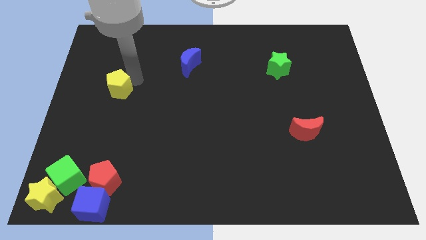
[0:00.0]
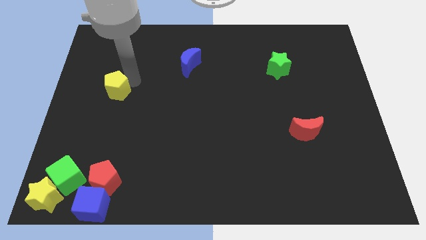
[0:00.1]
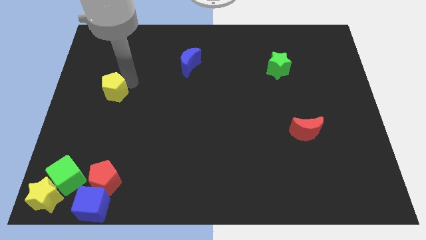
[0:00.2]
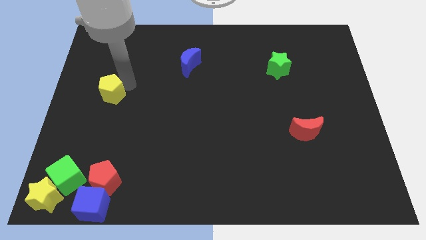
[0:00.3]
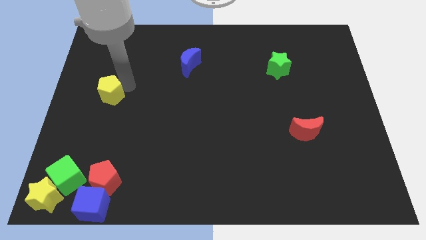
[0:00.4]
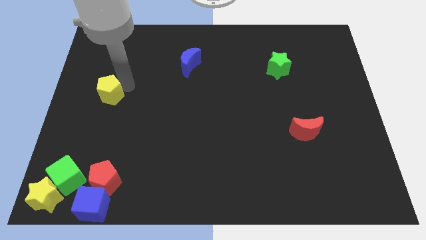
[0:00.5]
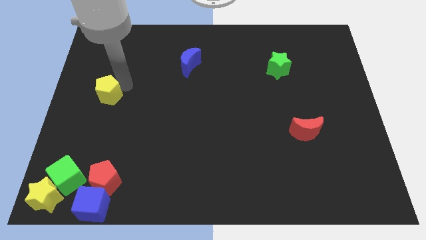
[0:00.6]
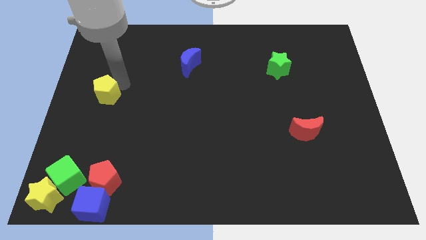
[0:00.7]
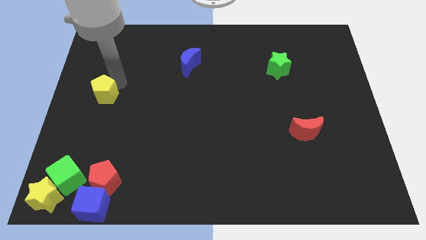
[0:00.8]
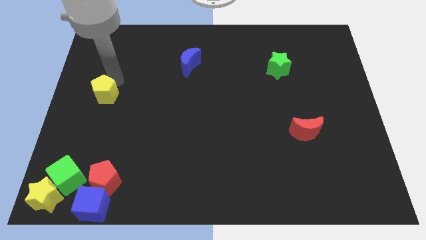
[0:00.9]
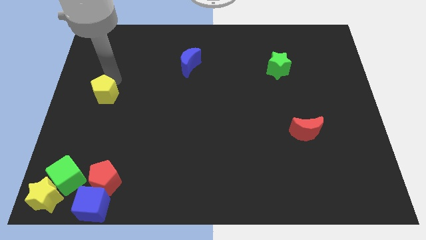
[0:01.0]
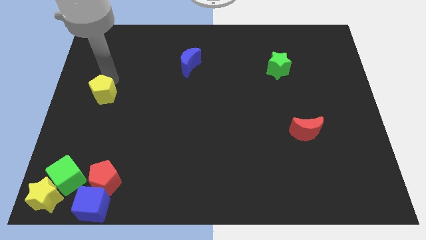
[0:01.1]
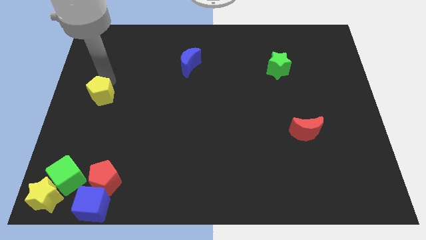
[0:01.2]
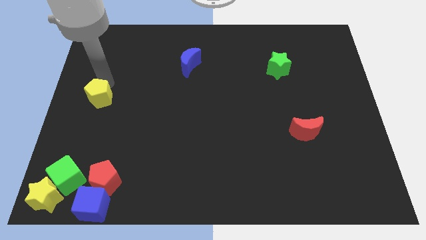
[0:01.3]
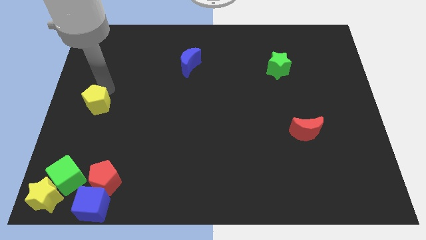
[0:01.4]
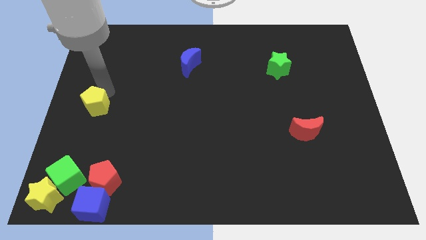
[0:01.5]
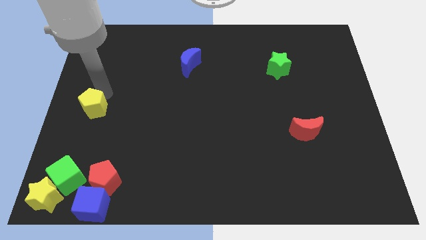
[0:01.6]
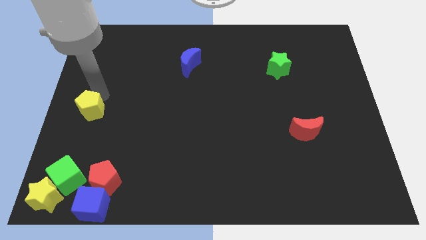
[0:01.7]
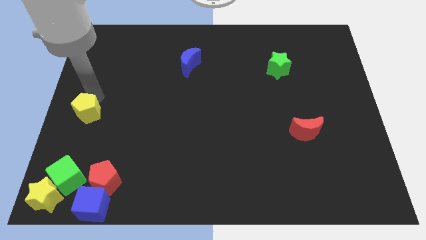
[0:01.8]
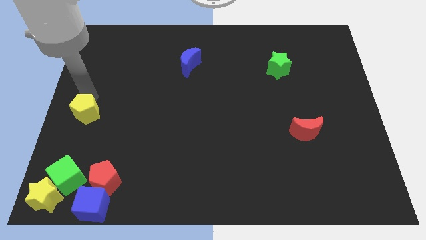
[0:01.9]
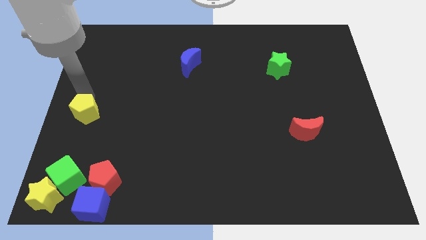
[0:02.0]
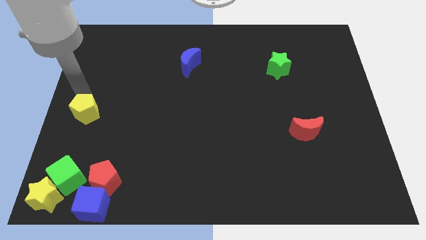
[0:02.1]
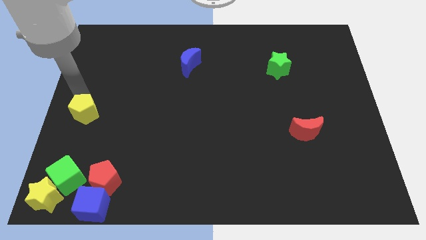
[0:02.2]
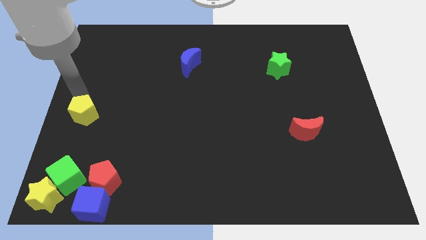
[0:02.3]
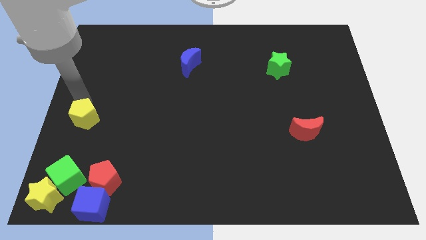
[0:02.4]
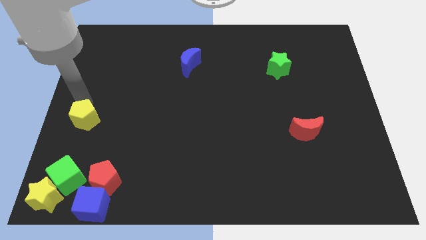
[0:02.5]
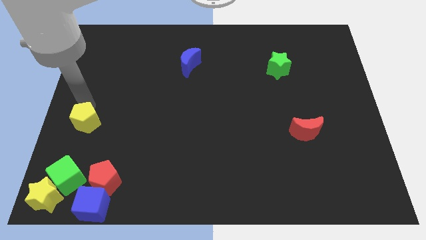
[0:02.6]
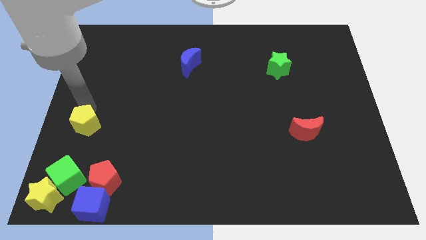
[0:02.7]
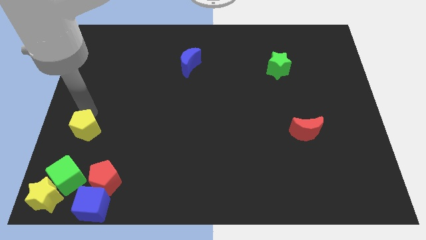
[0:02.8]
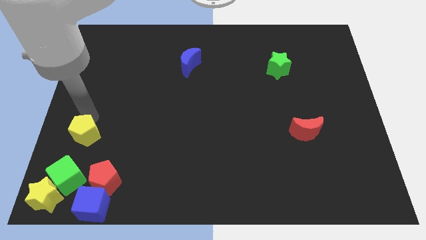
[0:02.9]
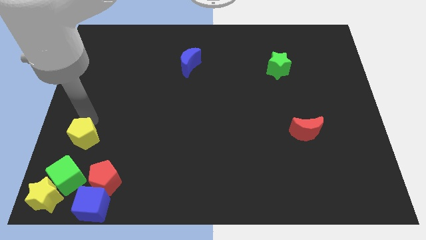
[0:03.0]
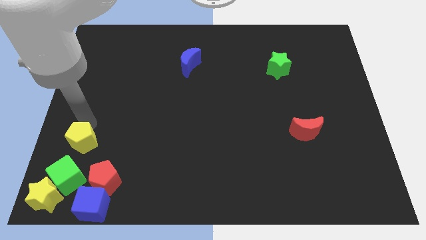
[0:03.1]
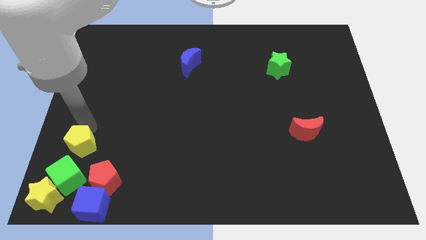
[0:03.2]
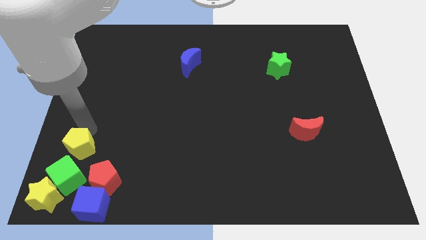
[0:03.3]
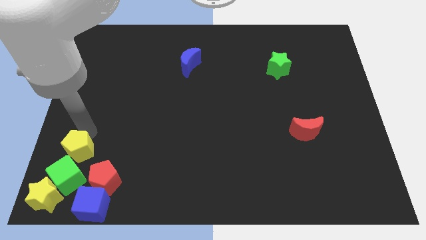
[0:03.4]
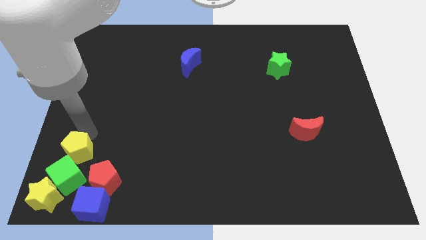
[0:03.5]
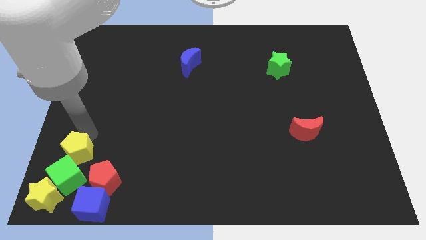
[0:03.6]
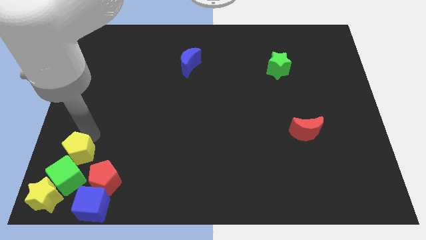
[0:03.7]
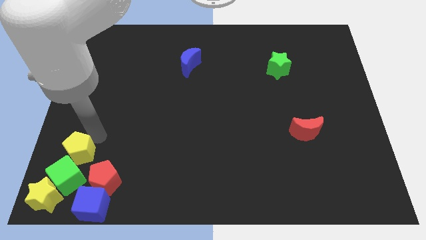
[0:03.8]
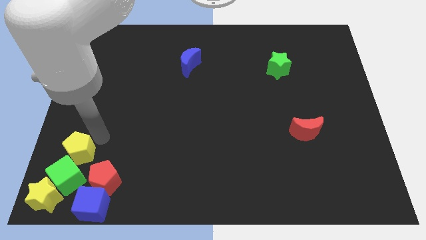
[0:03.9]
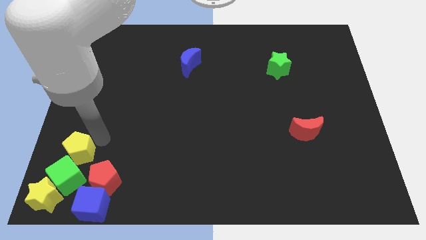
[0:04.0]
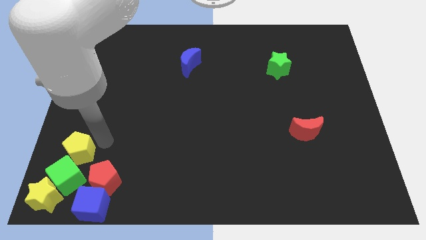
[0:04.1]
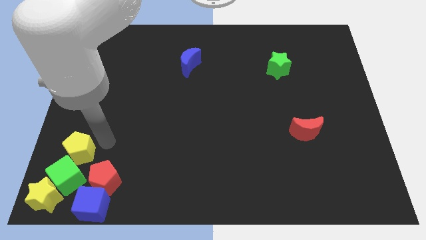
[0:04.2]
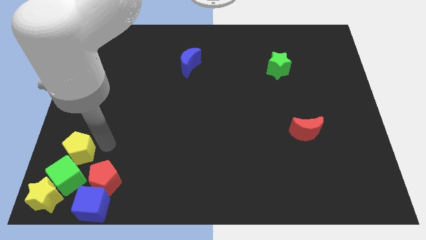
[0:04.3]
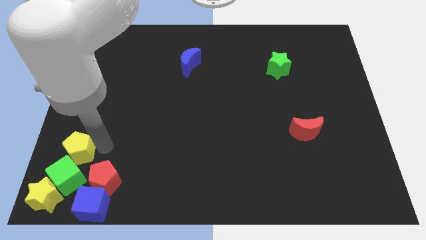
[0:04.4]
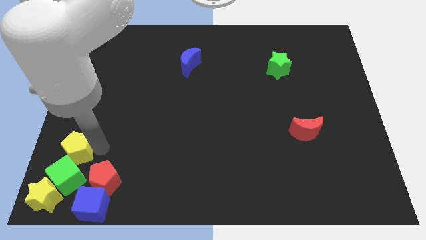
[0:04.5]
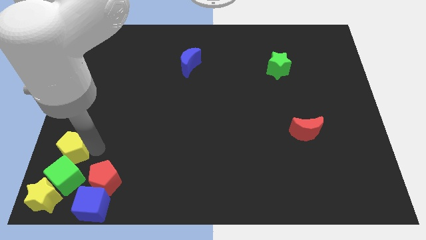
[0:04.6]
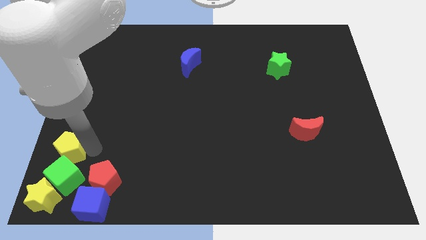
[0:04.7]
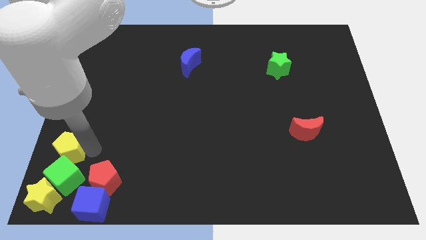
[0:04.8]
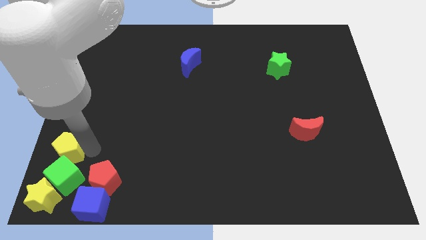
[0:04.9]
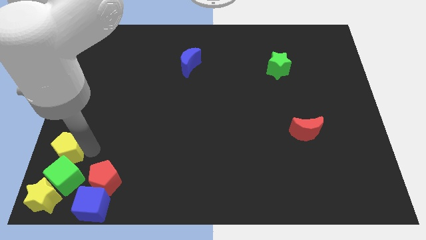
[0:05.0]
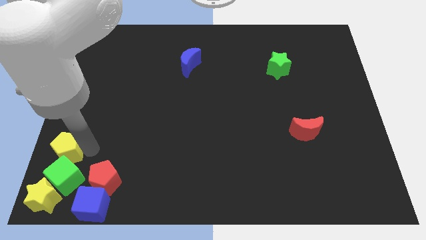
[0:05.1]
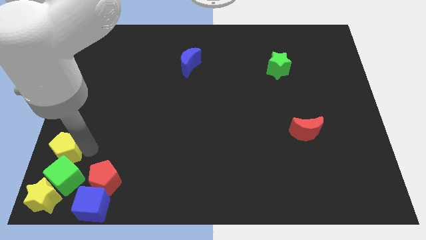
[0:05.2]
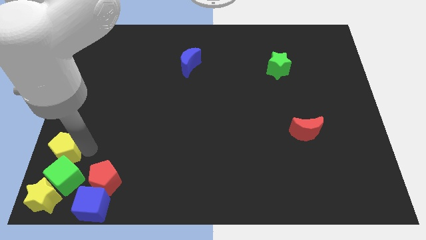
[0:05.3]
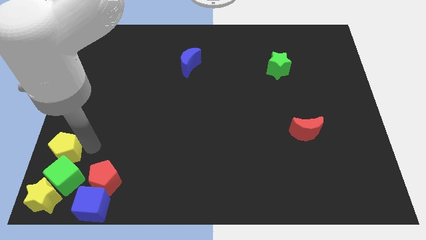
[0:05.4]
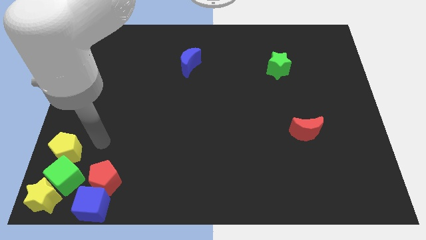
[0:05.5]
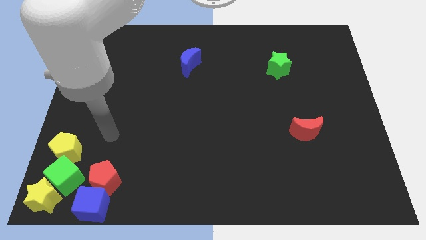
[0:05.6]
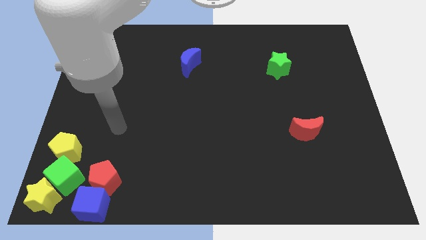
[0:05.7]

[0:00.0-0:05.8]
move the yellow pentagon to the top of green cube

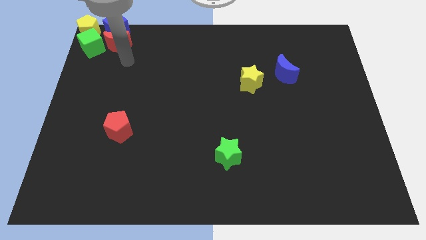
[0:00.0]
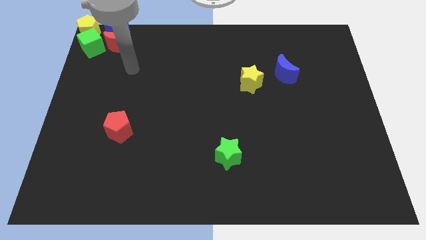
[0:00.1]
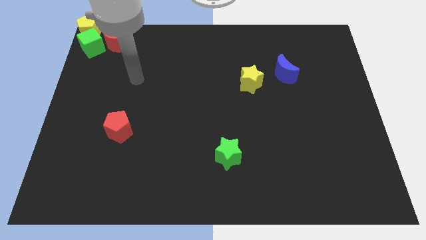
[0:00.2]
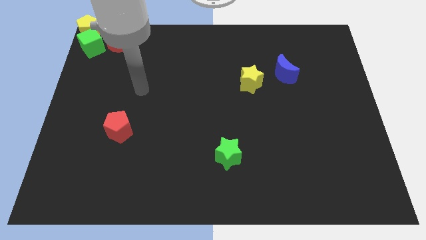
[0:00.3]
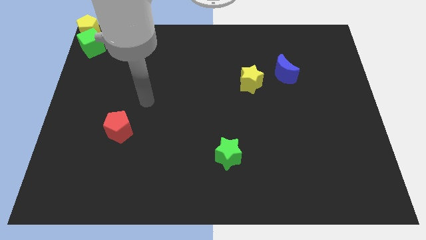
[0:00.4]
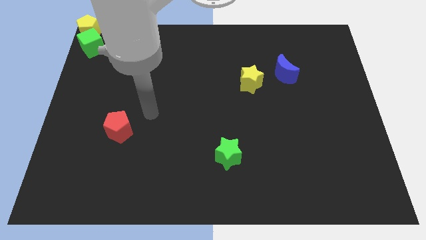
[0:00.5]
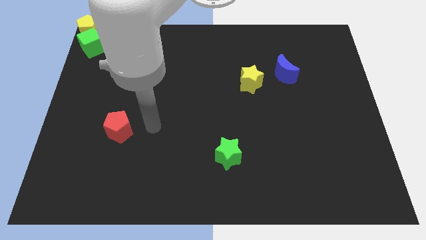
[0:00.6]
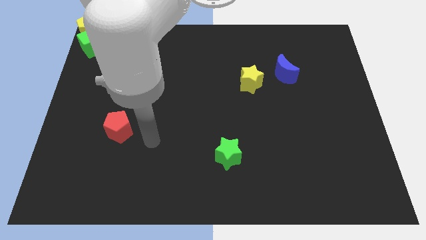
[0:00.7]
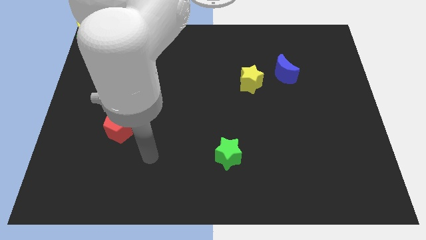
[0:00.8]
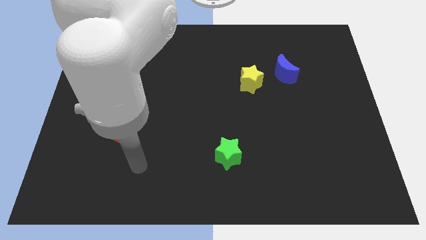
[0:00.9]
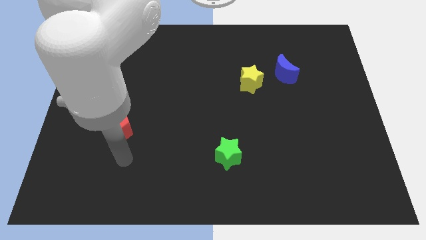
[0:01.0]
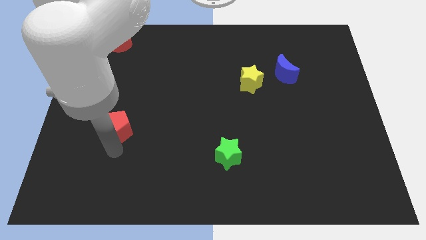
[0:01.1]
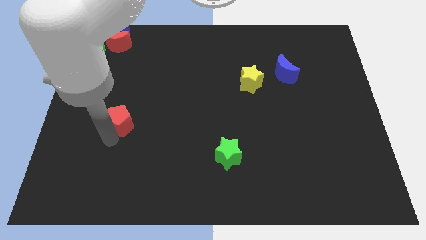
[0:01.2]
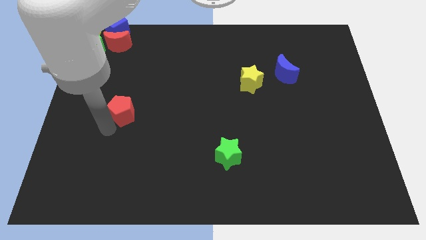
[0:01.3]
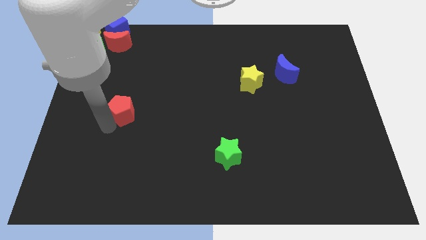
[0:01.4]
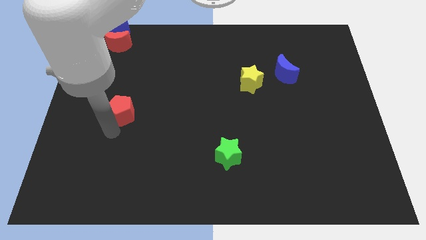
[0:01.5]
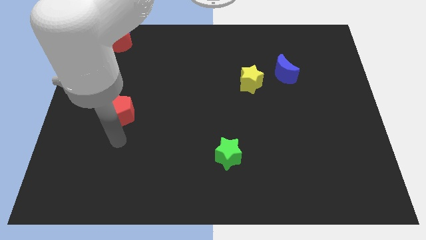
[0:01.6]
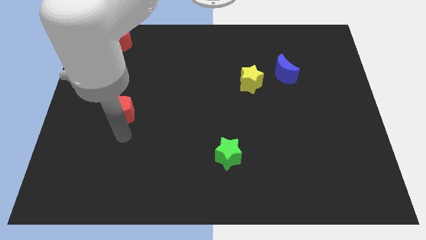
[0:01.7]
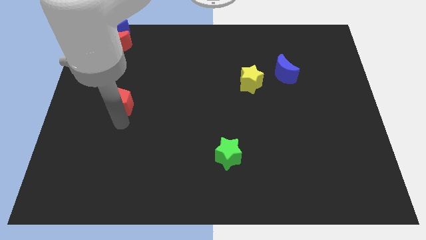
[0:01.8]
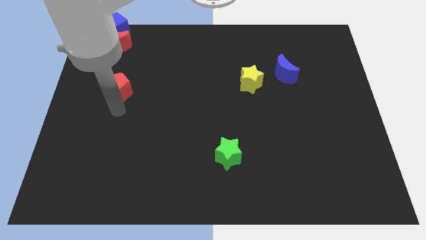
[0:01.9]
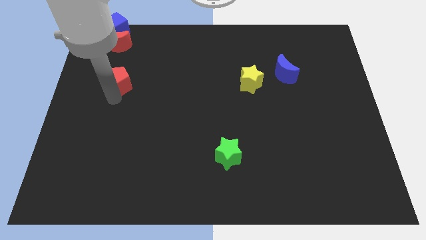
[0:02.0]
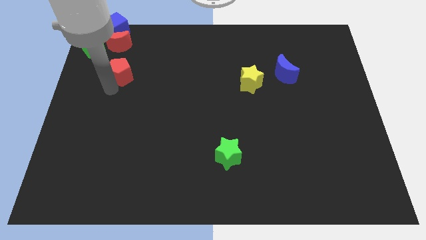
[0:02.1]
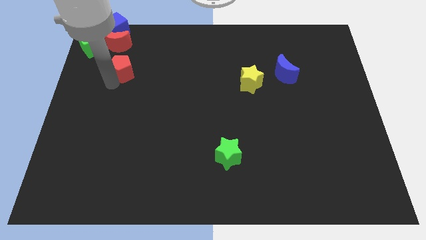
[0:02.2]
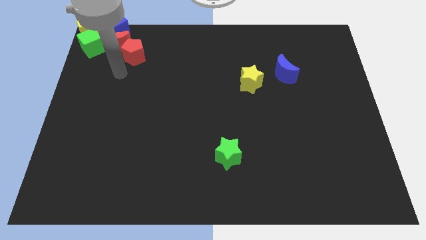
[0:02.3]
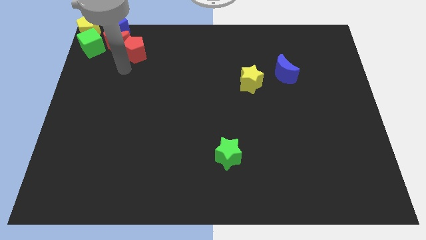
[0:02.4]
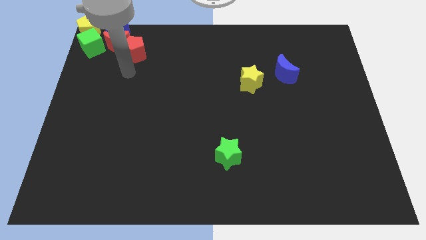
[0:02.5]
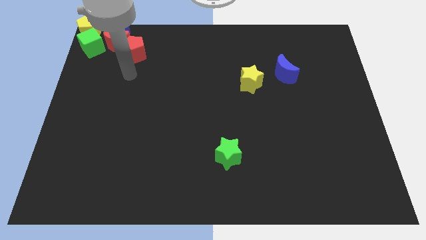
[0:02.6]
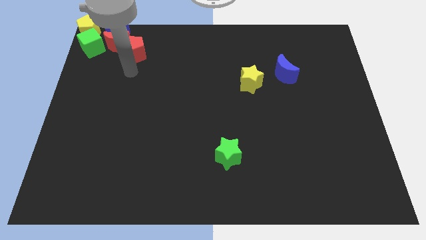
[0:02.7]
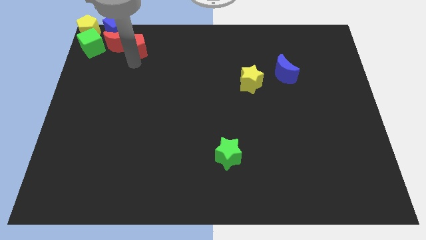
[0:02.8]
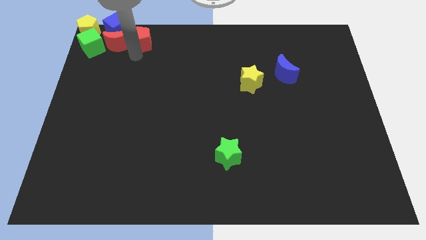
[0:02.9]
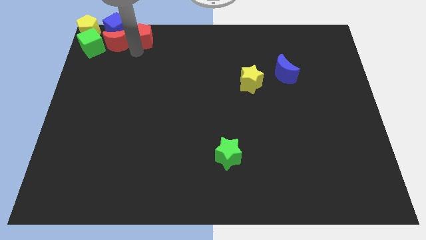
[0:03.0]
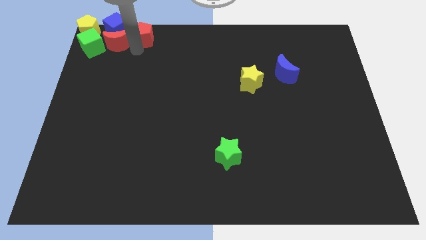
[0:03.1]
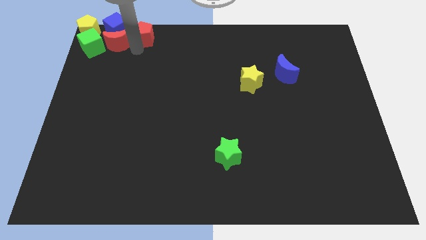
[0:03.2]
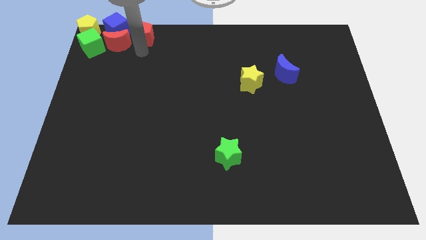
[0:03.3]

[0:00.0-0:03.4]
place the red pentagon to the right side of the red crescent
